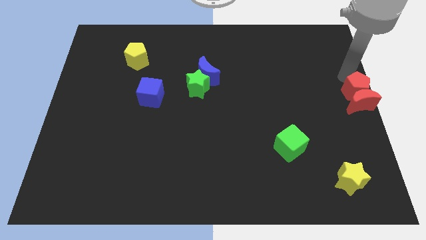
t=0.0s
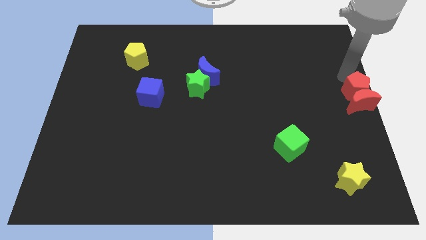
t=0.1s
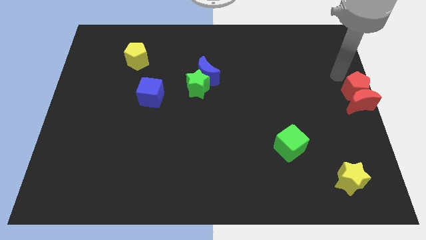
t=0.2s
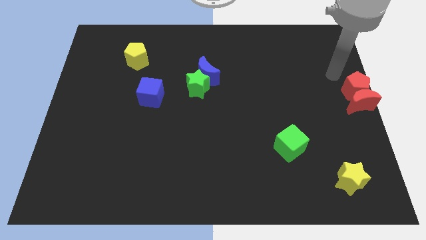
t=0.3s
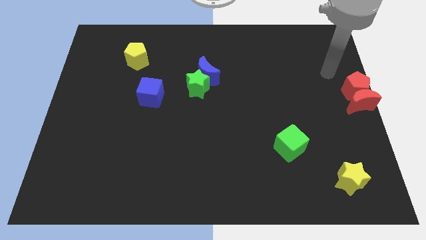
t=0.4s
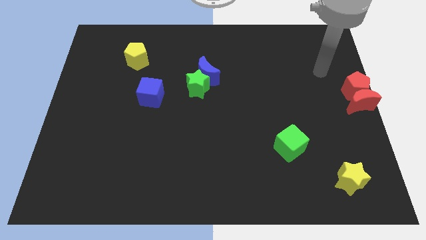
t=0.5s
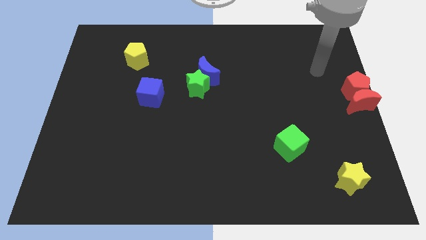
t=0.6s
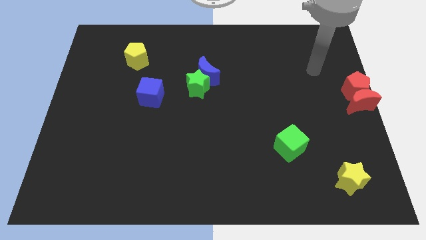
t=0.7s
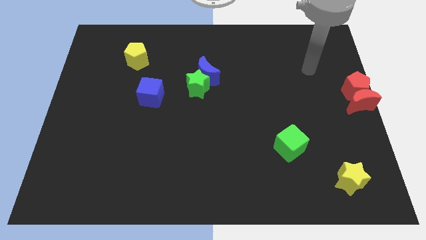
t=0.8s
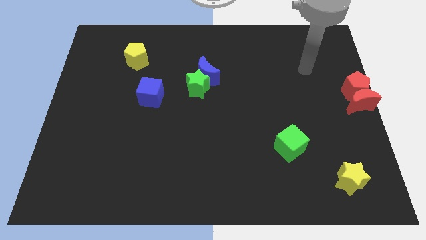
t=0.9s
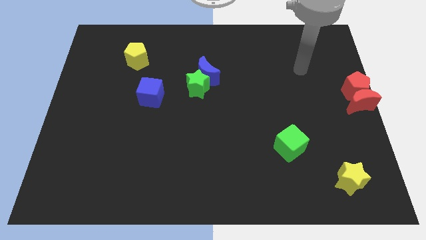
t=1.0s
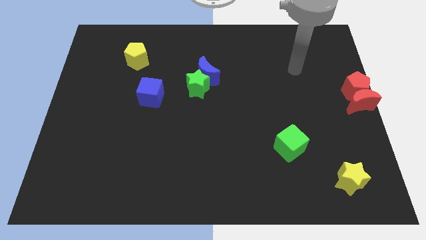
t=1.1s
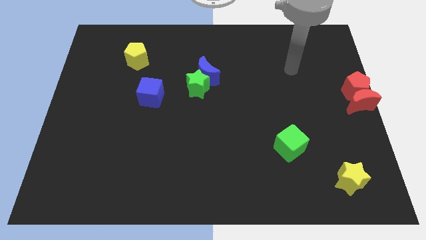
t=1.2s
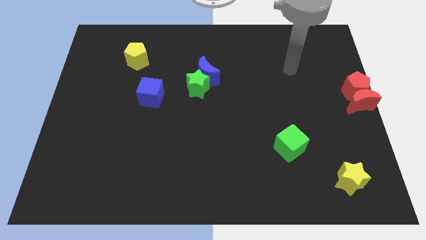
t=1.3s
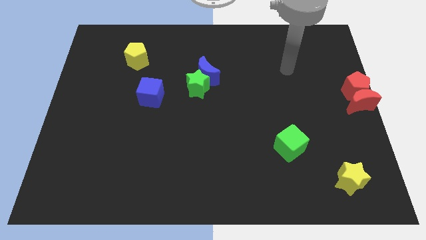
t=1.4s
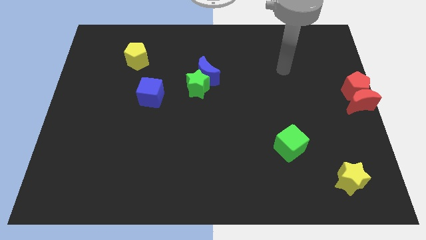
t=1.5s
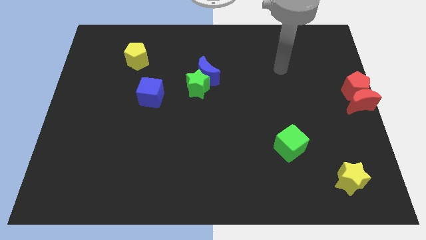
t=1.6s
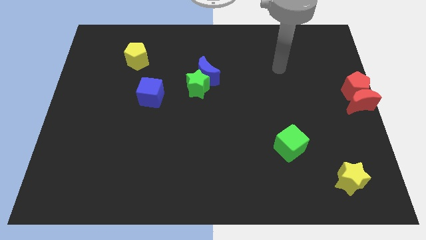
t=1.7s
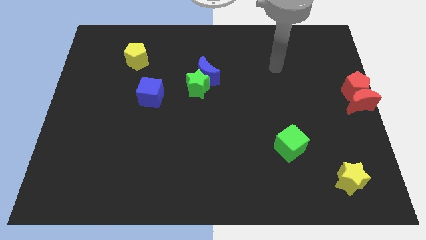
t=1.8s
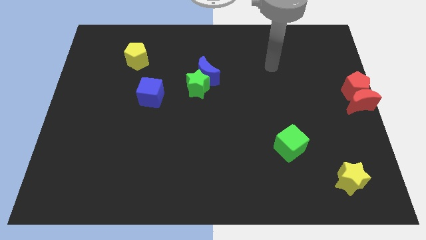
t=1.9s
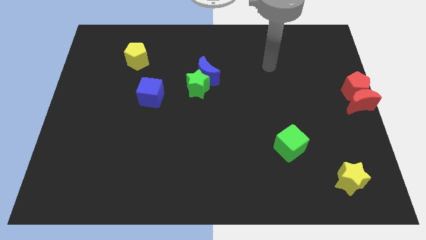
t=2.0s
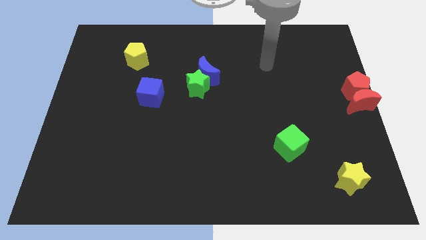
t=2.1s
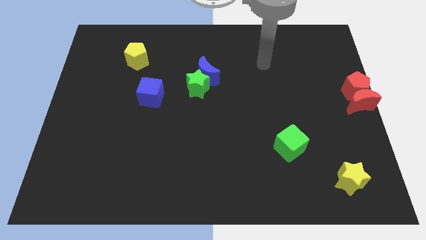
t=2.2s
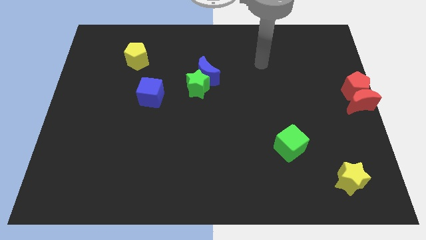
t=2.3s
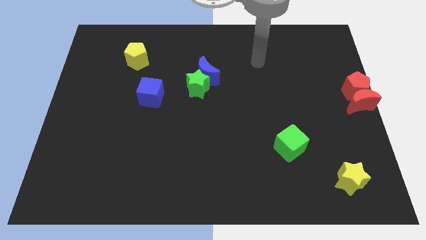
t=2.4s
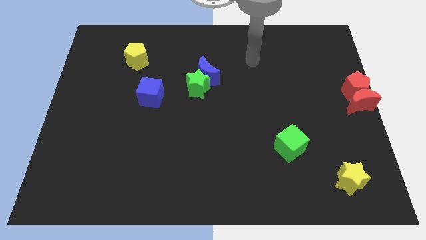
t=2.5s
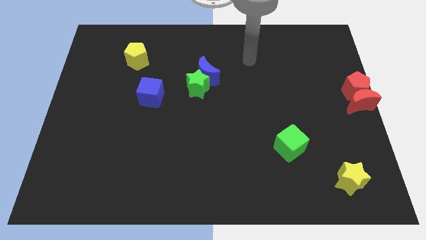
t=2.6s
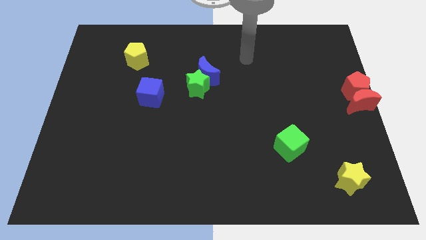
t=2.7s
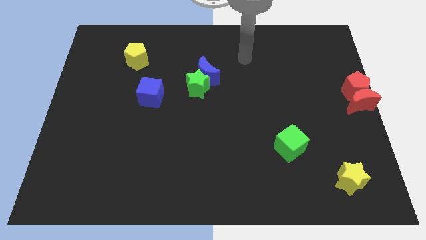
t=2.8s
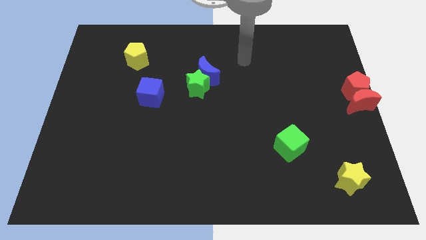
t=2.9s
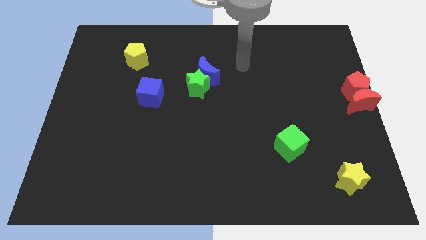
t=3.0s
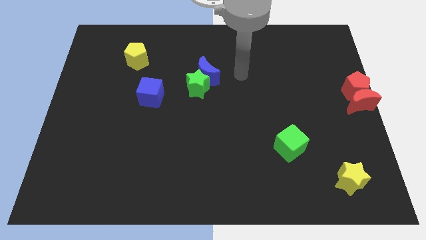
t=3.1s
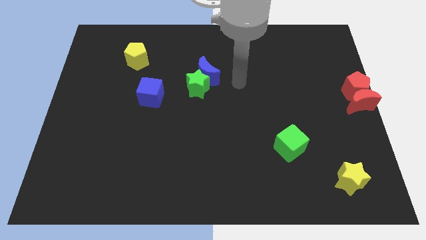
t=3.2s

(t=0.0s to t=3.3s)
move your arm towards the left side of the board

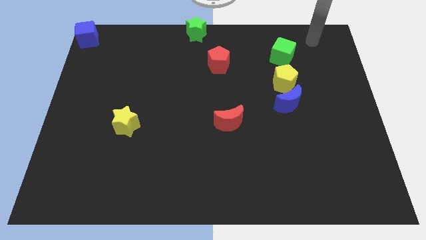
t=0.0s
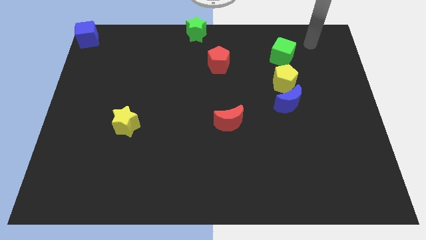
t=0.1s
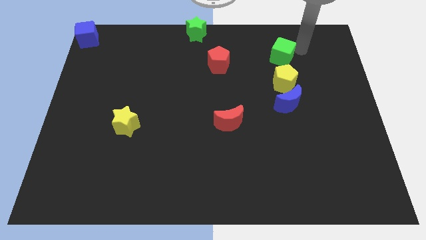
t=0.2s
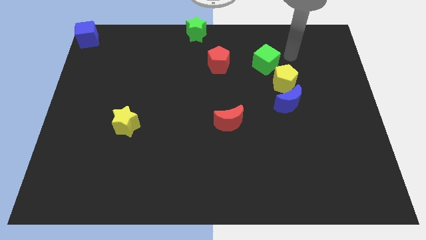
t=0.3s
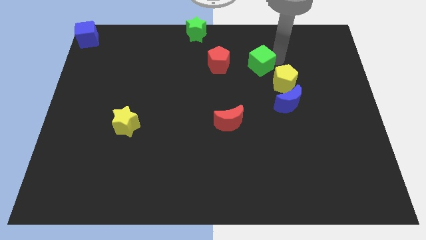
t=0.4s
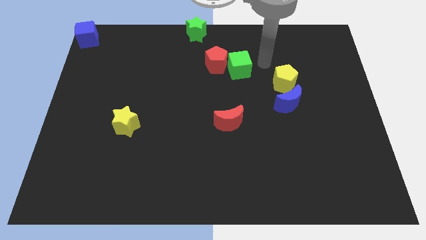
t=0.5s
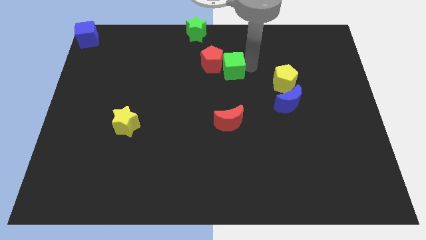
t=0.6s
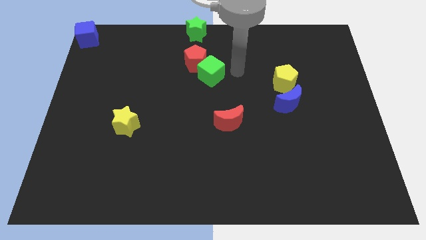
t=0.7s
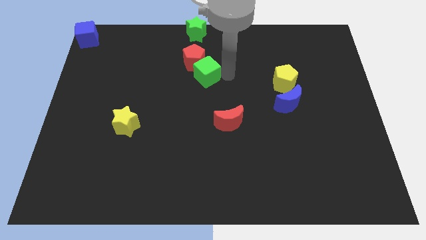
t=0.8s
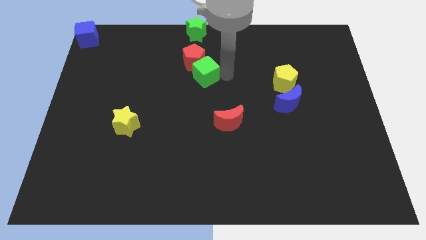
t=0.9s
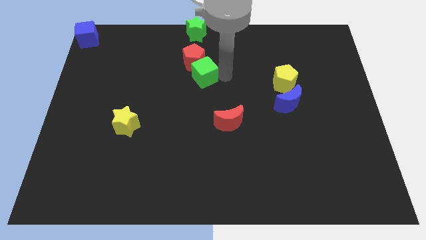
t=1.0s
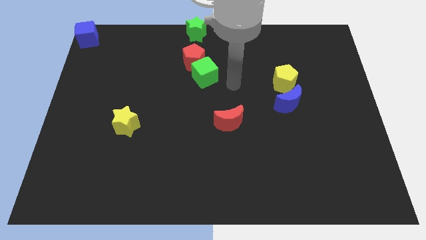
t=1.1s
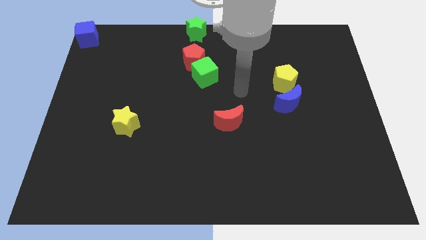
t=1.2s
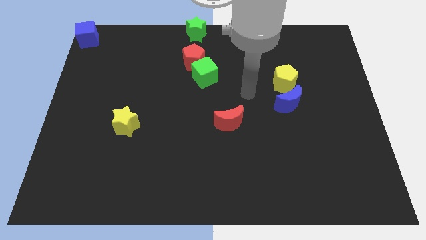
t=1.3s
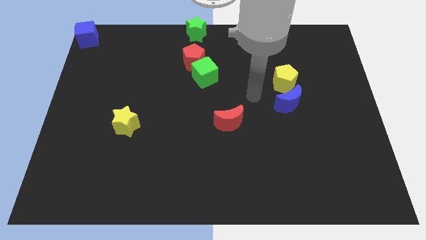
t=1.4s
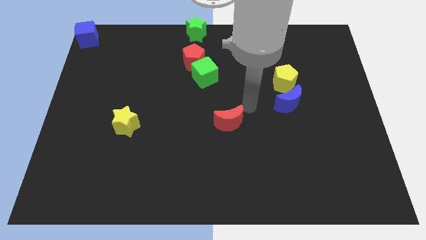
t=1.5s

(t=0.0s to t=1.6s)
push the green cube to the bottom right side of the red pentagon

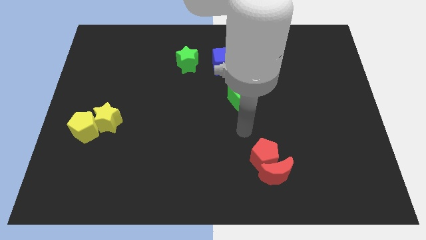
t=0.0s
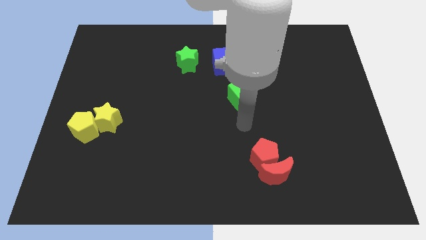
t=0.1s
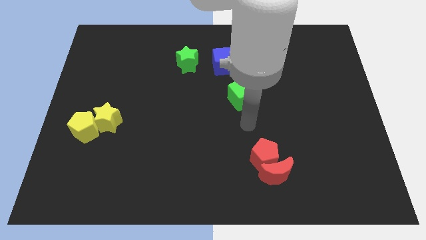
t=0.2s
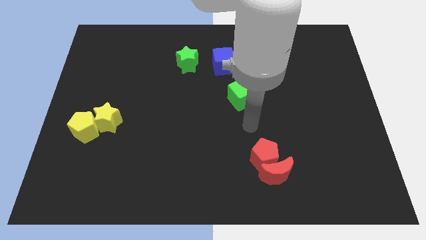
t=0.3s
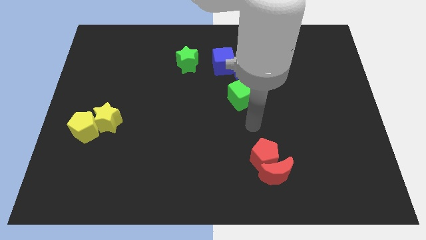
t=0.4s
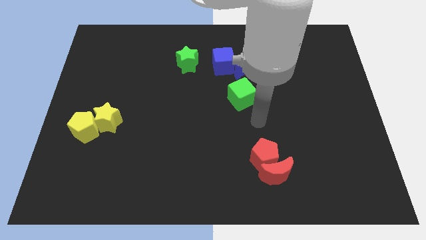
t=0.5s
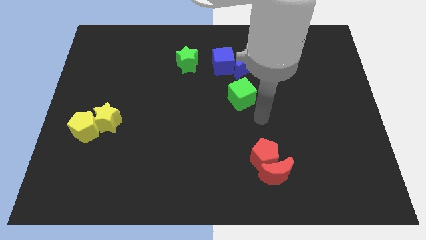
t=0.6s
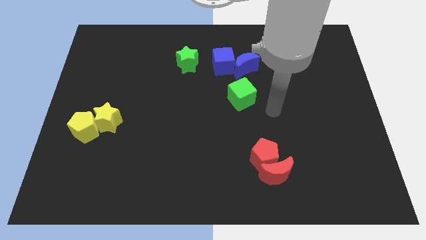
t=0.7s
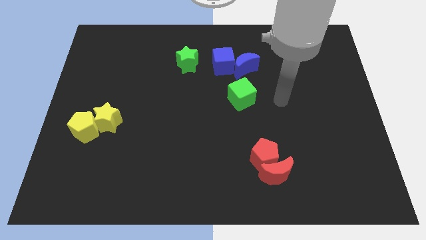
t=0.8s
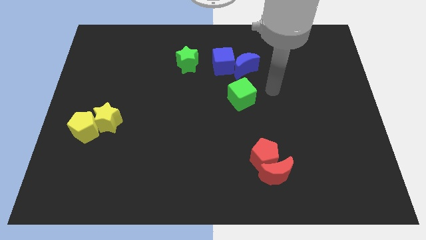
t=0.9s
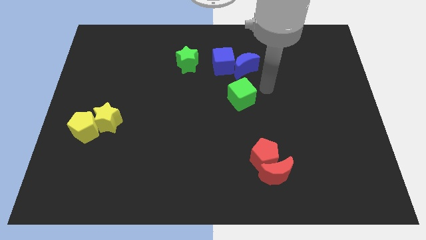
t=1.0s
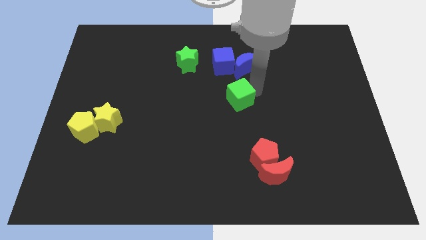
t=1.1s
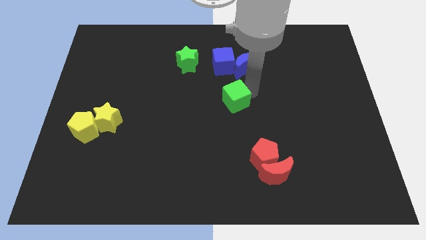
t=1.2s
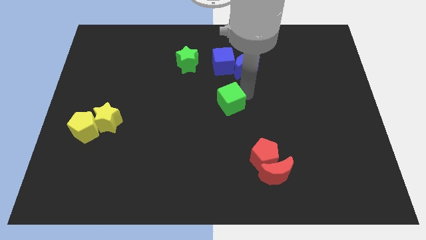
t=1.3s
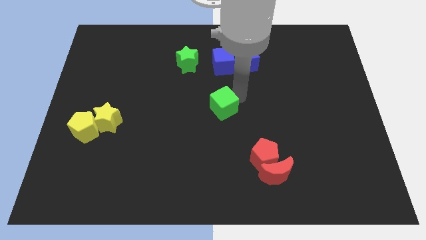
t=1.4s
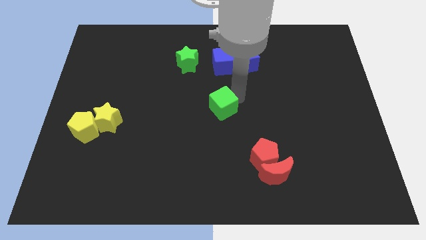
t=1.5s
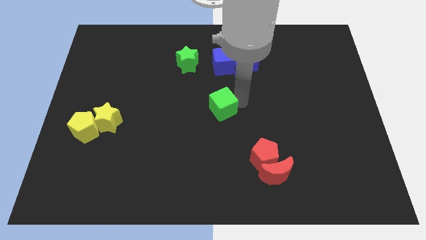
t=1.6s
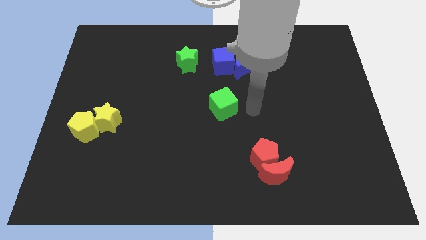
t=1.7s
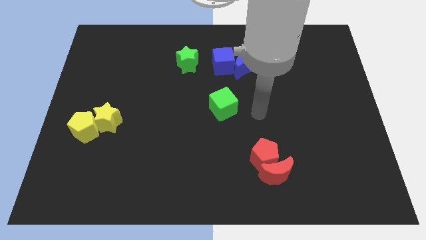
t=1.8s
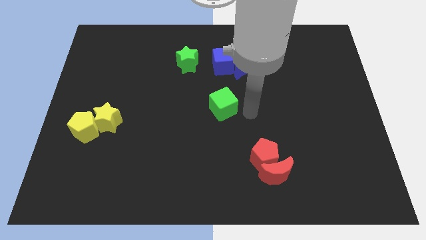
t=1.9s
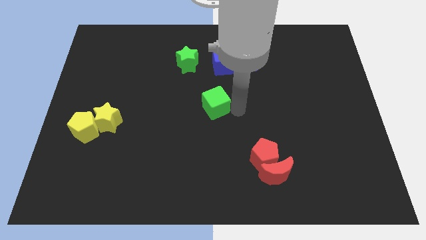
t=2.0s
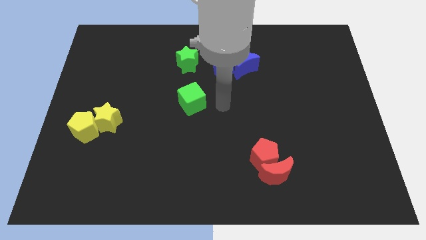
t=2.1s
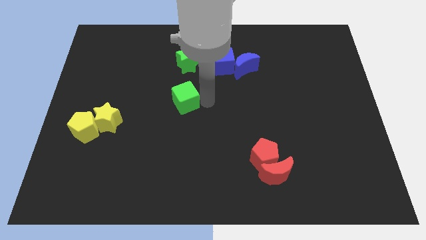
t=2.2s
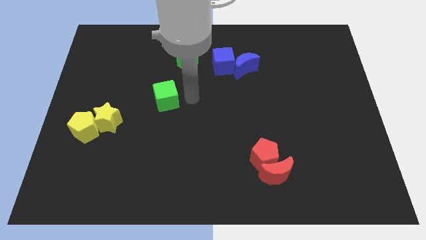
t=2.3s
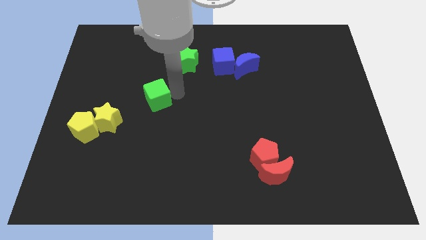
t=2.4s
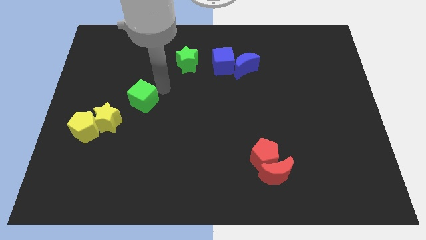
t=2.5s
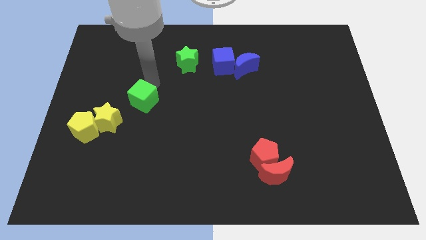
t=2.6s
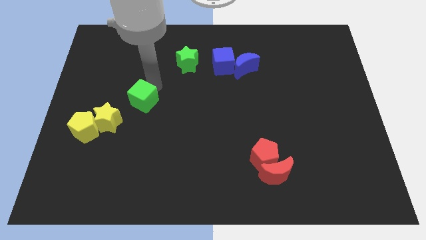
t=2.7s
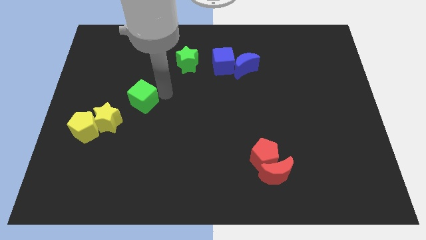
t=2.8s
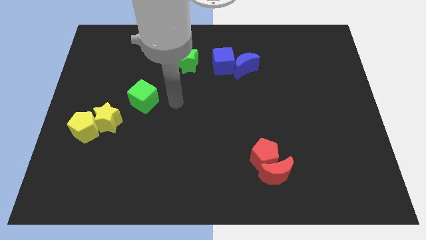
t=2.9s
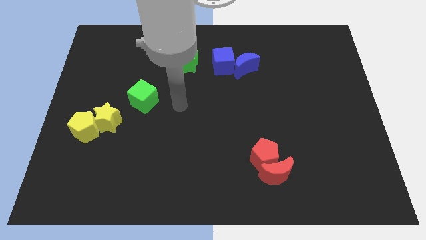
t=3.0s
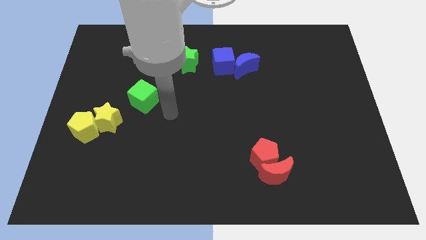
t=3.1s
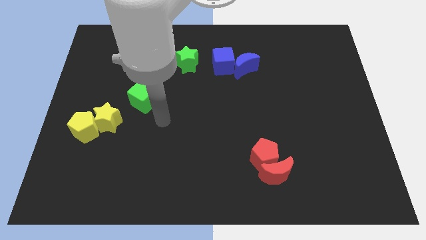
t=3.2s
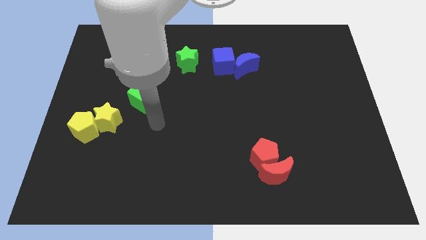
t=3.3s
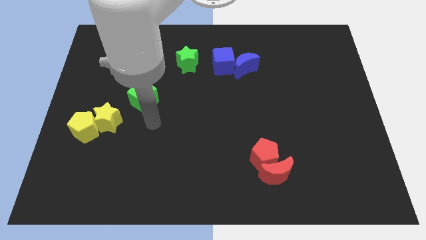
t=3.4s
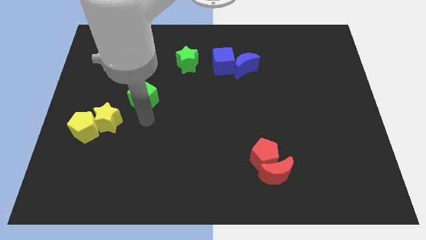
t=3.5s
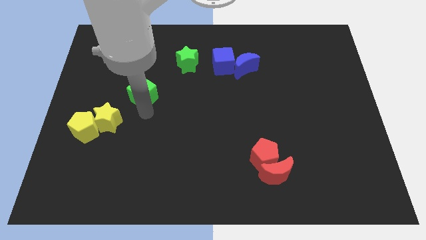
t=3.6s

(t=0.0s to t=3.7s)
place the green cube in between the green star and yellow star

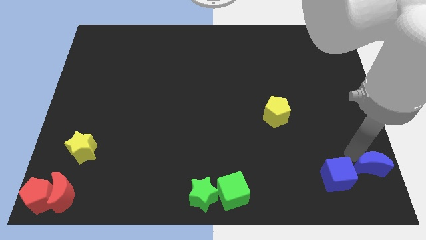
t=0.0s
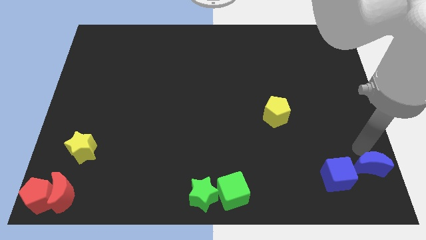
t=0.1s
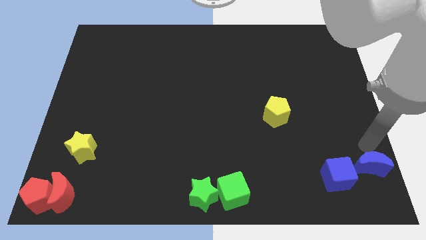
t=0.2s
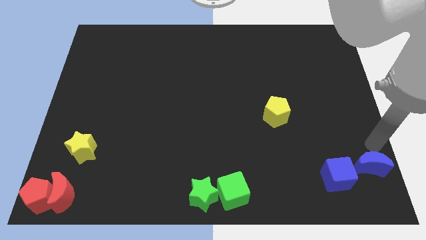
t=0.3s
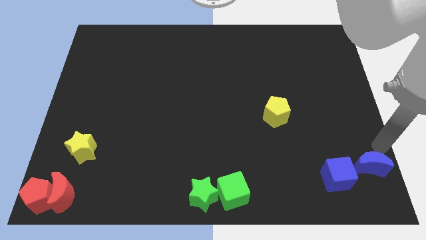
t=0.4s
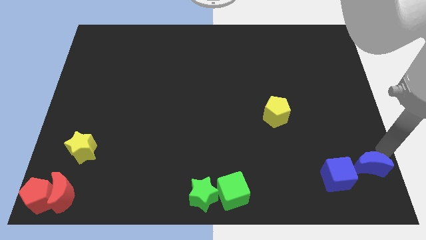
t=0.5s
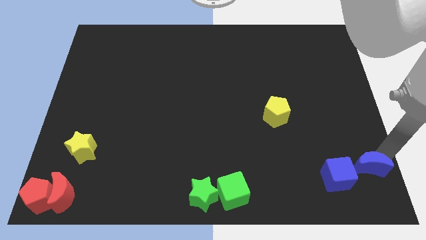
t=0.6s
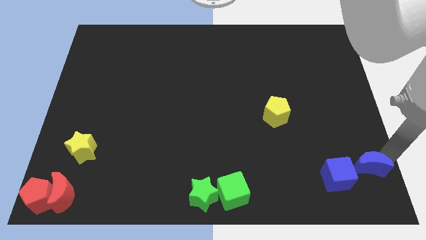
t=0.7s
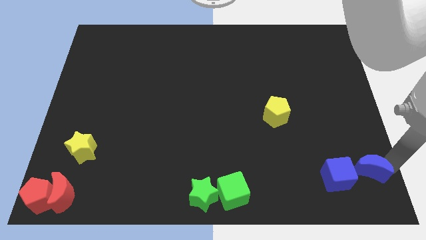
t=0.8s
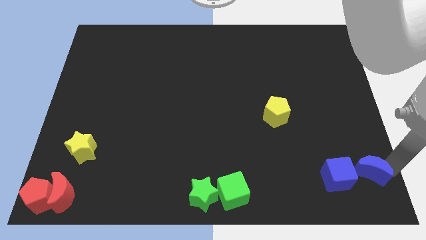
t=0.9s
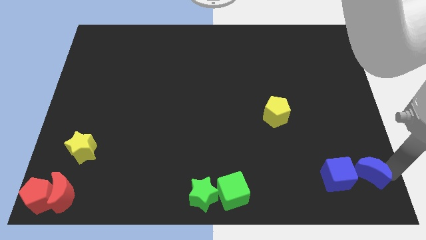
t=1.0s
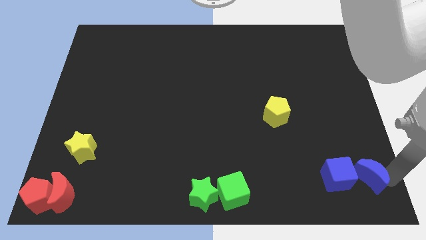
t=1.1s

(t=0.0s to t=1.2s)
place the blue crescent to the right side of the blue cube
